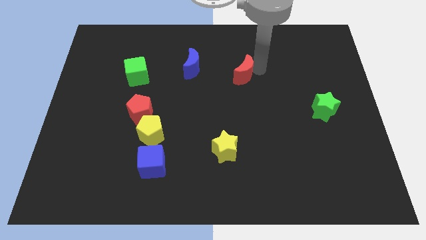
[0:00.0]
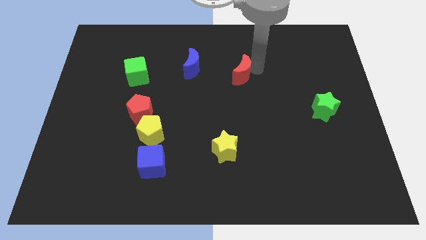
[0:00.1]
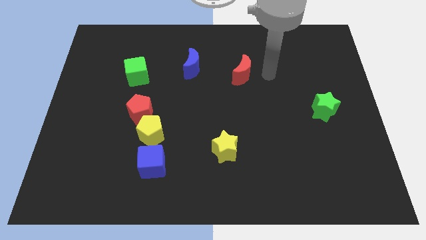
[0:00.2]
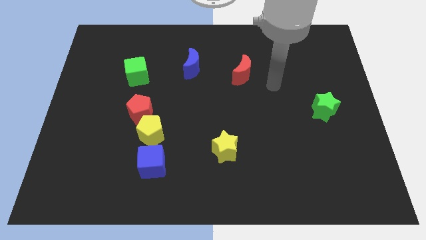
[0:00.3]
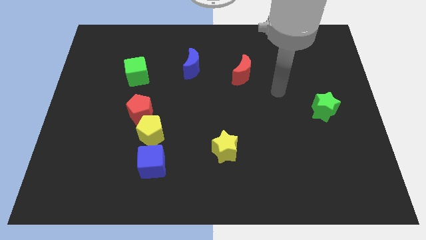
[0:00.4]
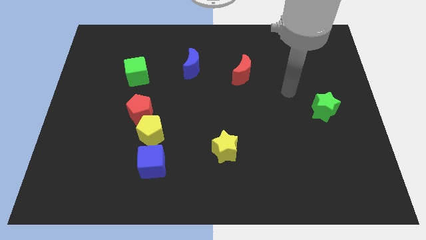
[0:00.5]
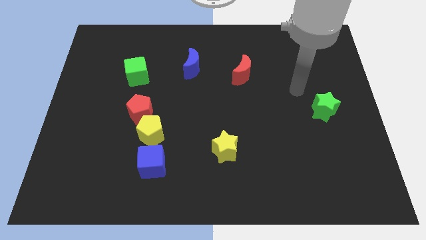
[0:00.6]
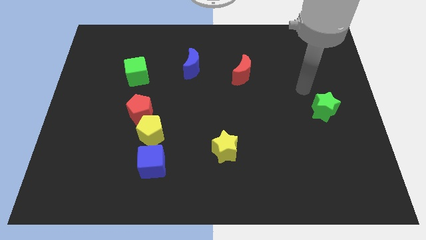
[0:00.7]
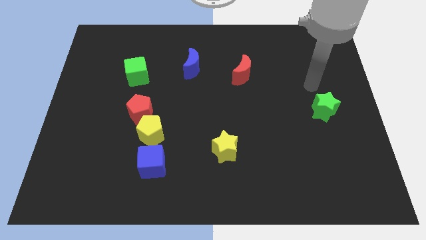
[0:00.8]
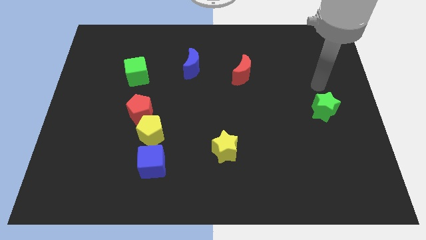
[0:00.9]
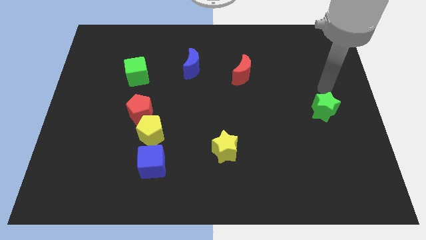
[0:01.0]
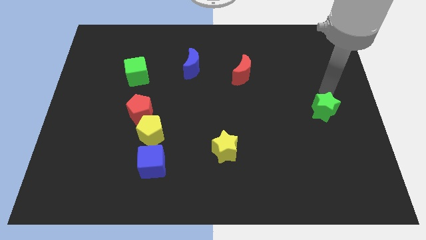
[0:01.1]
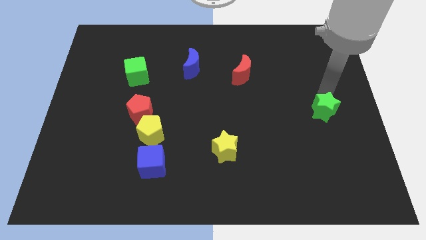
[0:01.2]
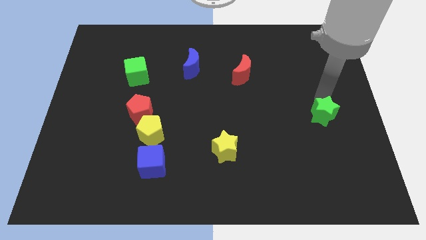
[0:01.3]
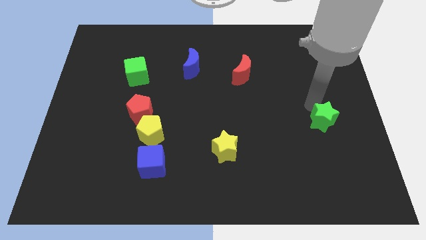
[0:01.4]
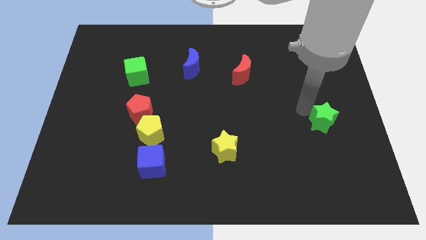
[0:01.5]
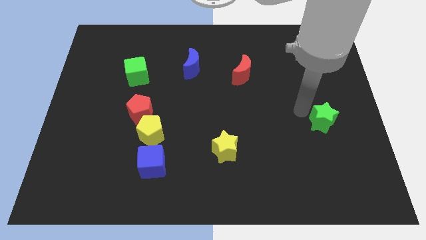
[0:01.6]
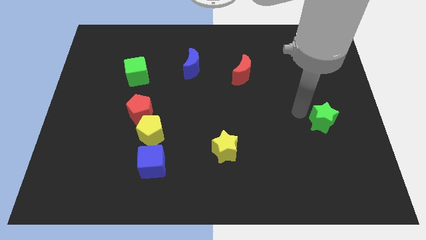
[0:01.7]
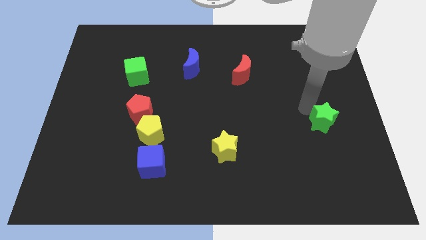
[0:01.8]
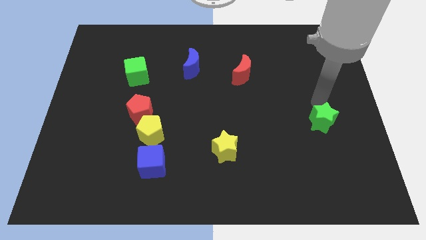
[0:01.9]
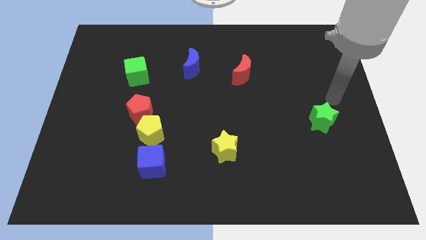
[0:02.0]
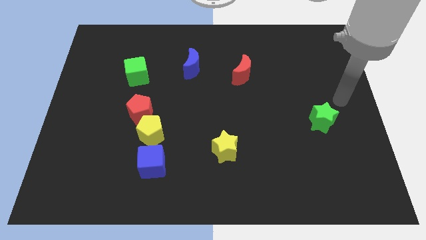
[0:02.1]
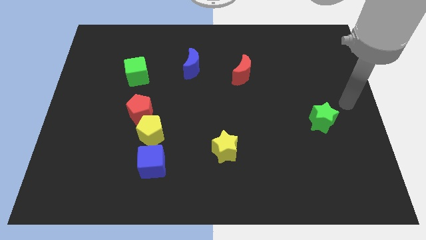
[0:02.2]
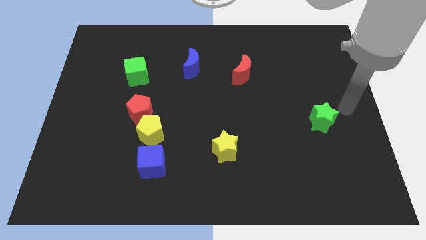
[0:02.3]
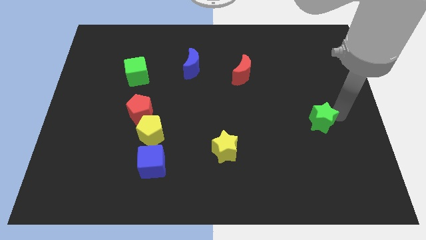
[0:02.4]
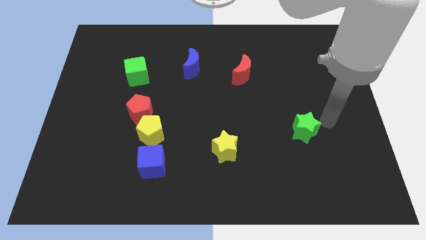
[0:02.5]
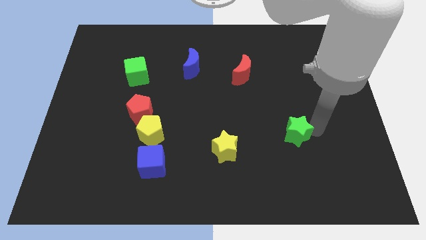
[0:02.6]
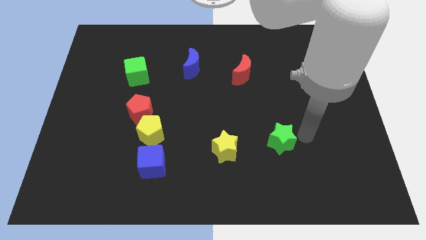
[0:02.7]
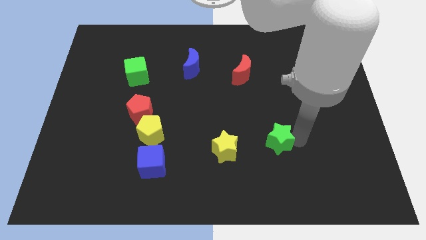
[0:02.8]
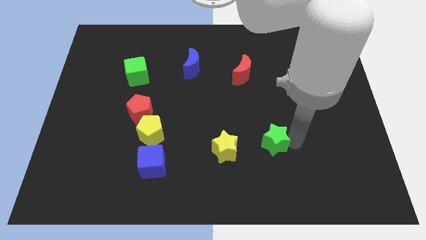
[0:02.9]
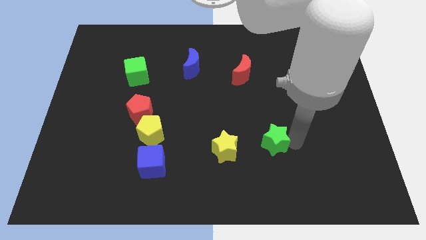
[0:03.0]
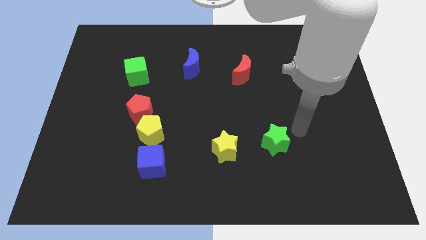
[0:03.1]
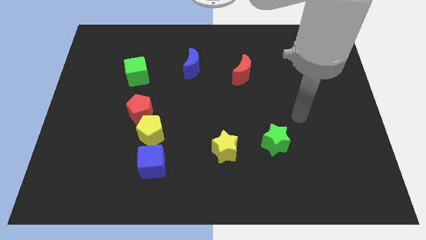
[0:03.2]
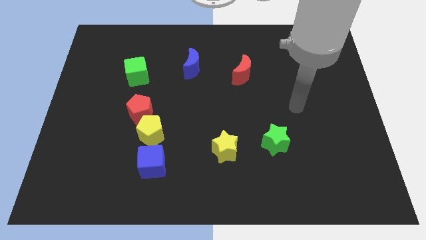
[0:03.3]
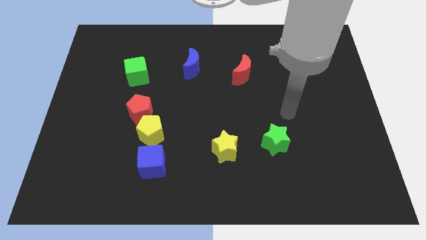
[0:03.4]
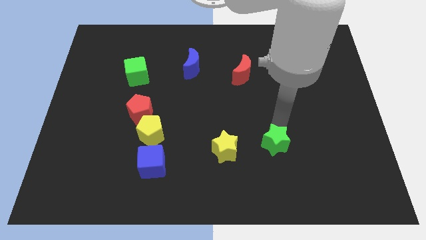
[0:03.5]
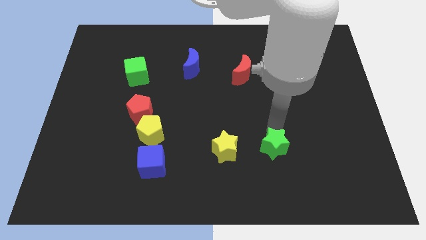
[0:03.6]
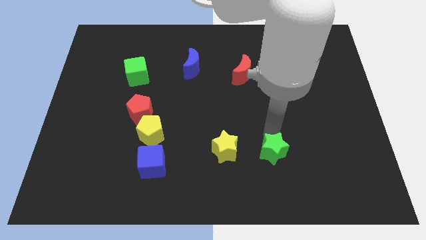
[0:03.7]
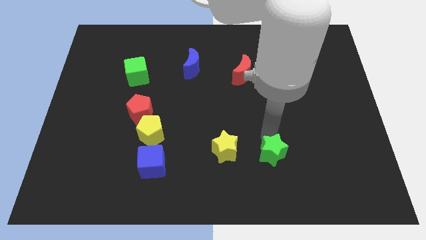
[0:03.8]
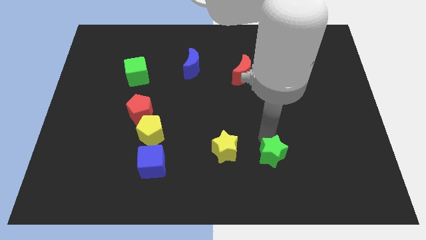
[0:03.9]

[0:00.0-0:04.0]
move the green star to the right of the yellow star

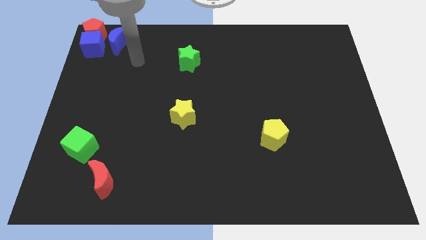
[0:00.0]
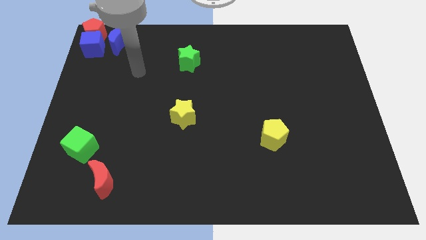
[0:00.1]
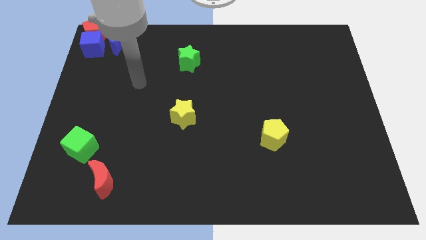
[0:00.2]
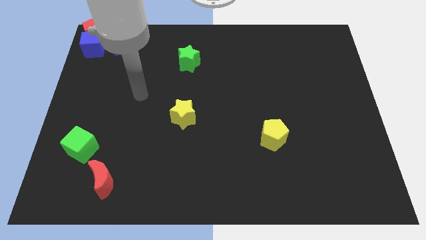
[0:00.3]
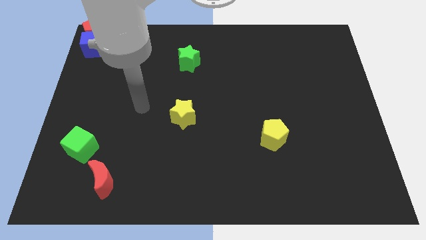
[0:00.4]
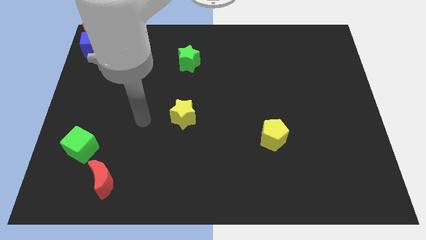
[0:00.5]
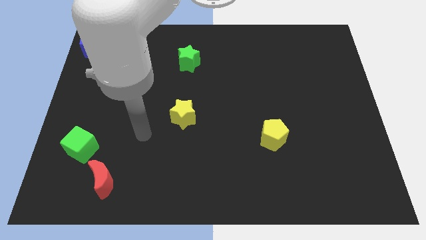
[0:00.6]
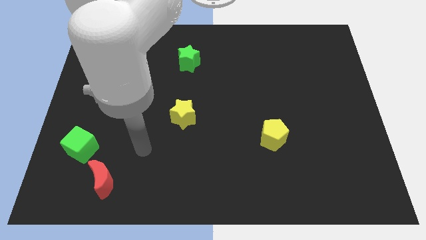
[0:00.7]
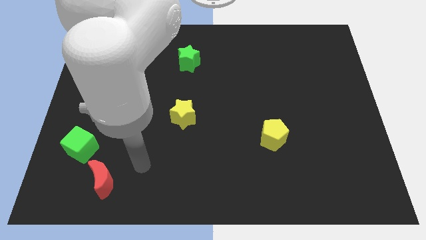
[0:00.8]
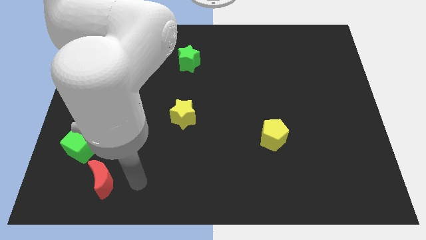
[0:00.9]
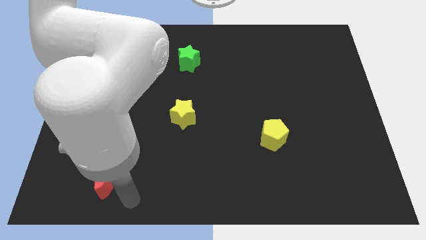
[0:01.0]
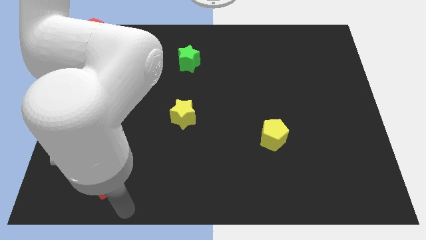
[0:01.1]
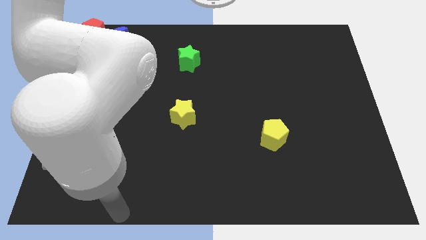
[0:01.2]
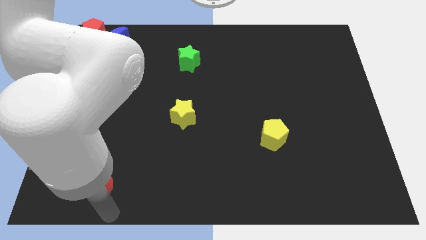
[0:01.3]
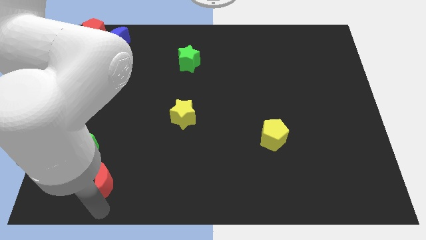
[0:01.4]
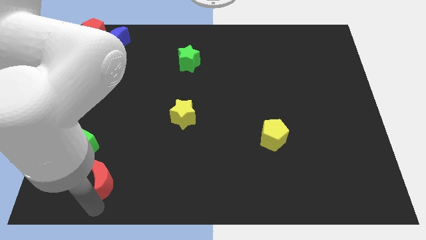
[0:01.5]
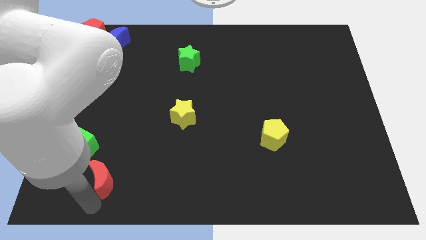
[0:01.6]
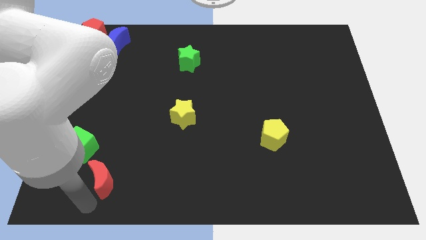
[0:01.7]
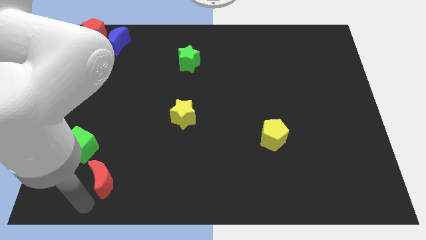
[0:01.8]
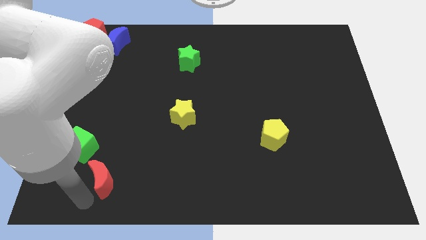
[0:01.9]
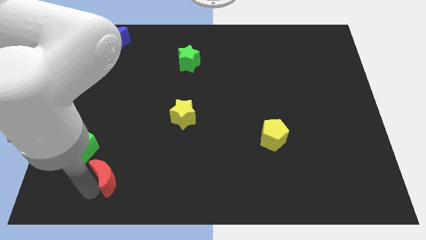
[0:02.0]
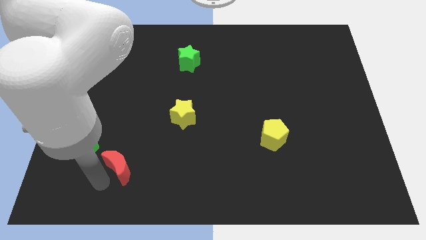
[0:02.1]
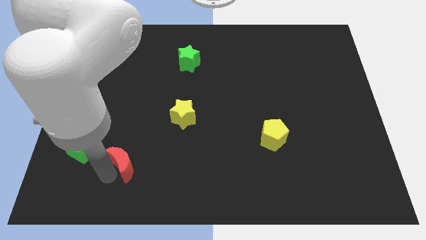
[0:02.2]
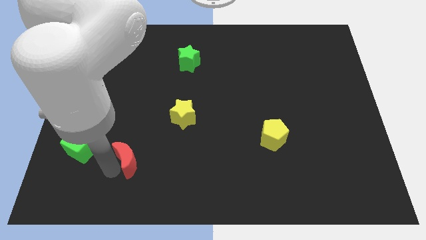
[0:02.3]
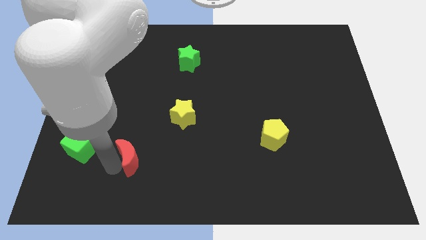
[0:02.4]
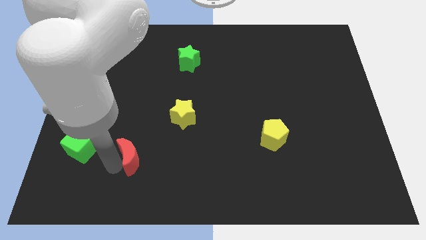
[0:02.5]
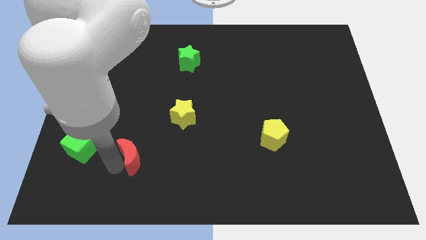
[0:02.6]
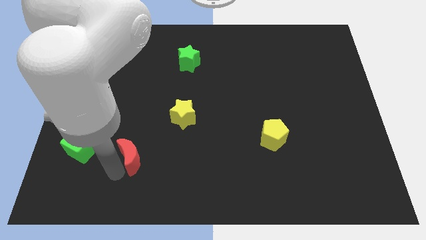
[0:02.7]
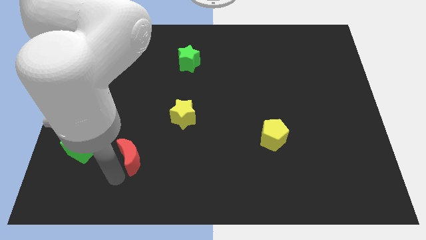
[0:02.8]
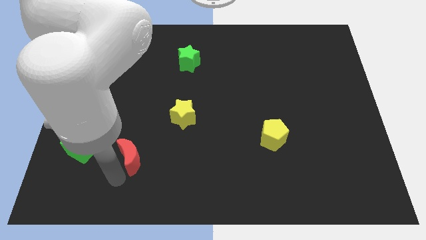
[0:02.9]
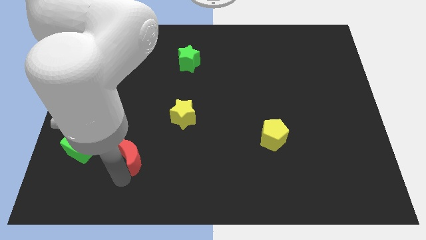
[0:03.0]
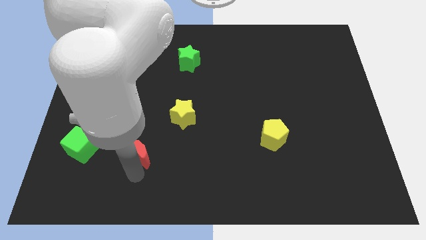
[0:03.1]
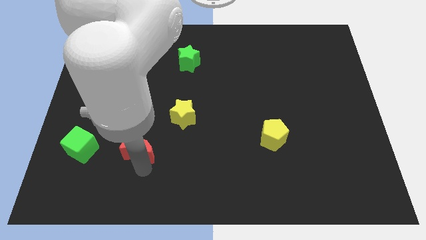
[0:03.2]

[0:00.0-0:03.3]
push the red crescent to the right of the green cube

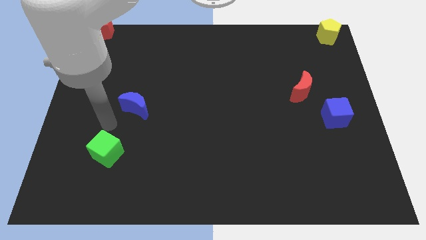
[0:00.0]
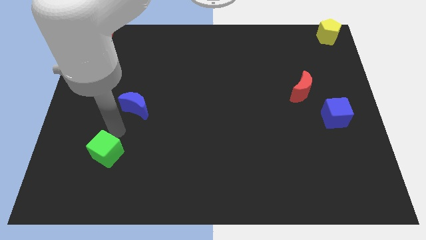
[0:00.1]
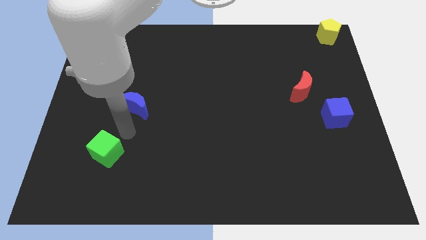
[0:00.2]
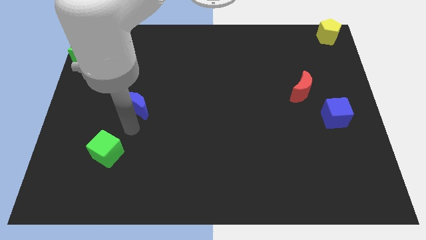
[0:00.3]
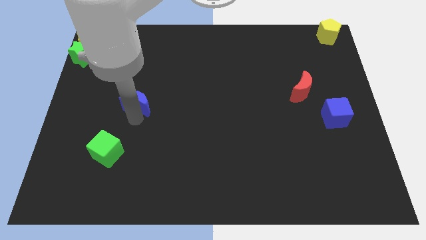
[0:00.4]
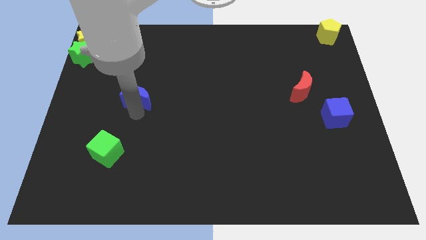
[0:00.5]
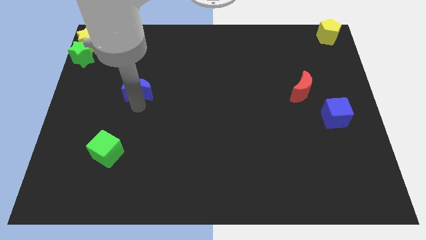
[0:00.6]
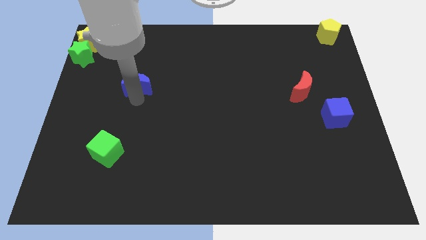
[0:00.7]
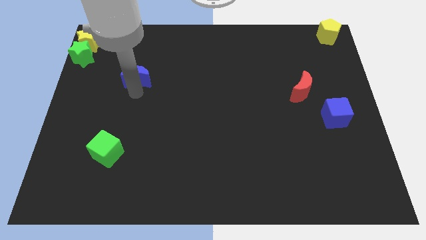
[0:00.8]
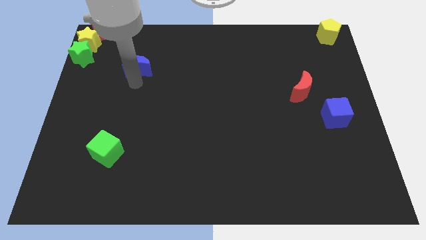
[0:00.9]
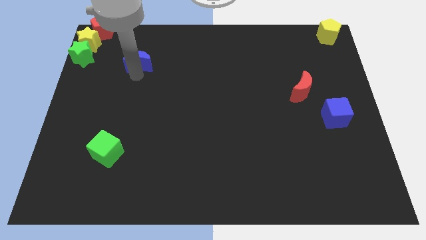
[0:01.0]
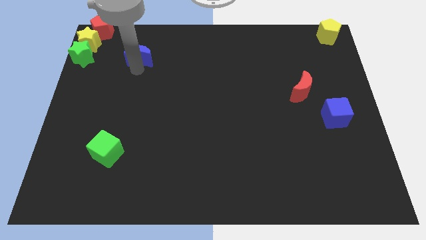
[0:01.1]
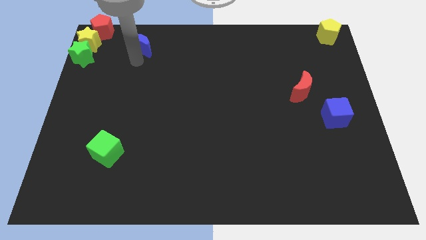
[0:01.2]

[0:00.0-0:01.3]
move the blue moon right to the green star

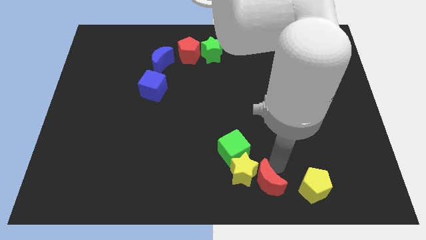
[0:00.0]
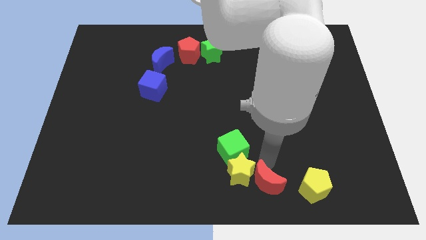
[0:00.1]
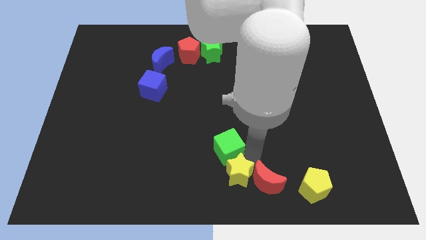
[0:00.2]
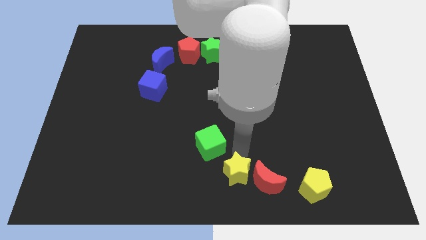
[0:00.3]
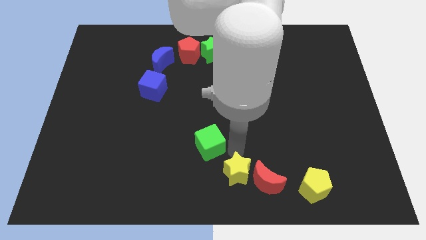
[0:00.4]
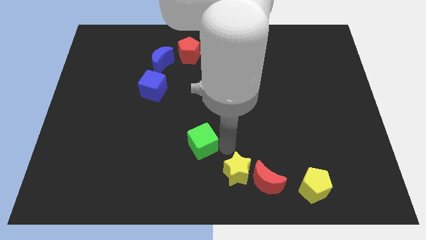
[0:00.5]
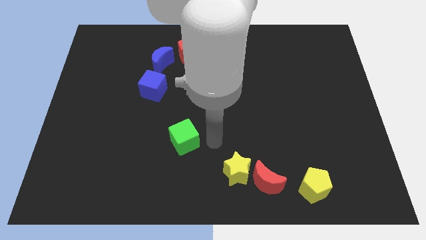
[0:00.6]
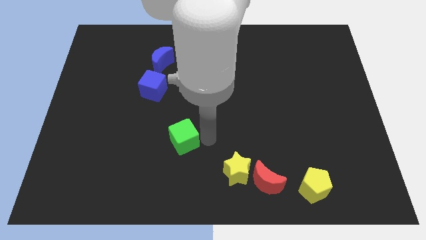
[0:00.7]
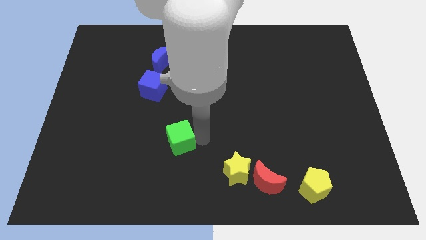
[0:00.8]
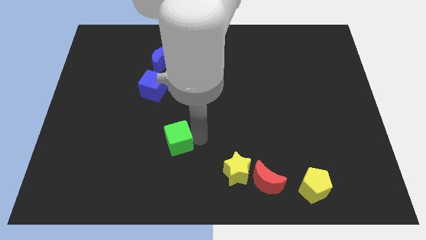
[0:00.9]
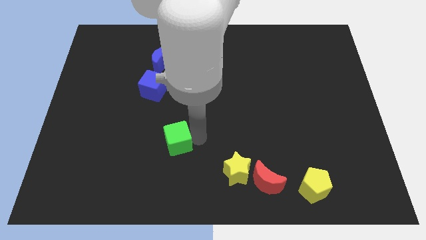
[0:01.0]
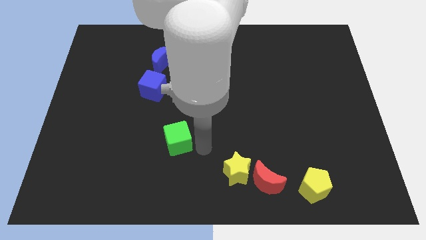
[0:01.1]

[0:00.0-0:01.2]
separate the green cube from yellow star
